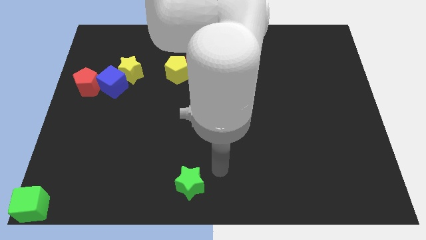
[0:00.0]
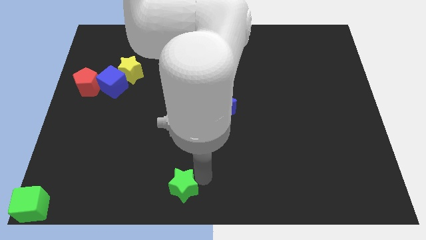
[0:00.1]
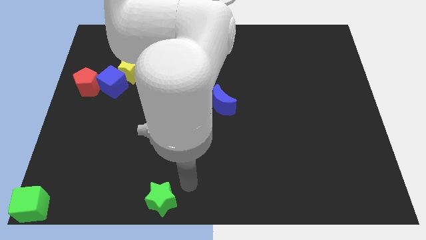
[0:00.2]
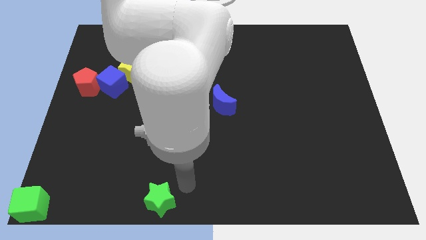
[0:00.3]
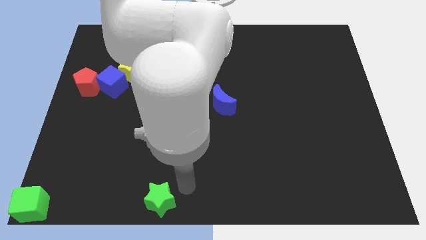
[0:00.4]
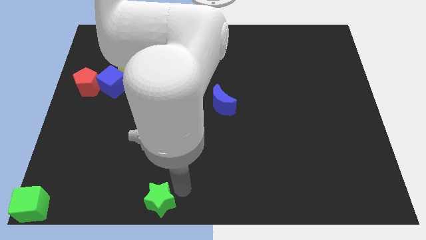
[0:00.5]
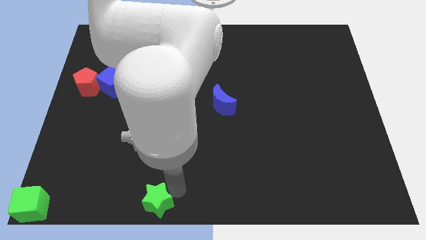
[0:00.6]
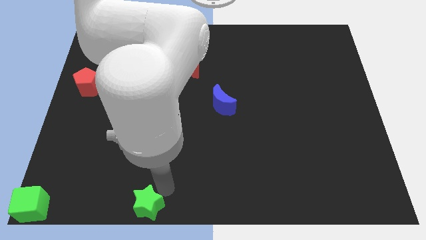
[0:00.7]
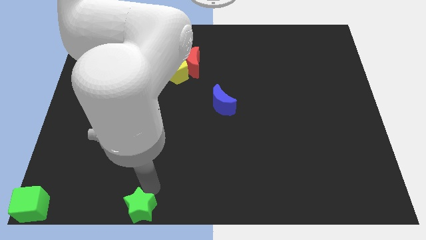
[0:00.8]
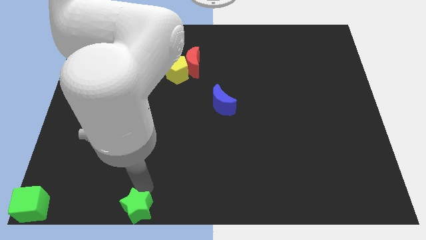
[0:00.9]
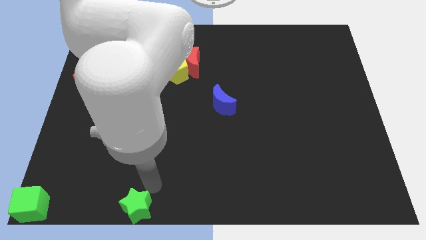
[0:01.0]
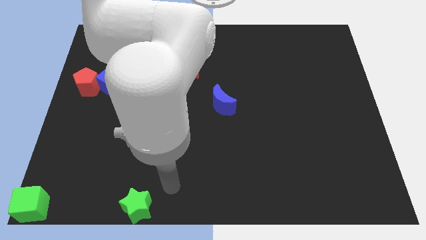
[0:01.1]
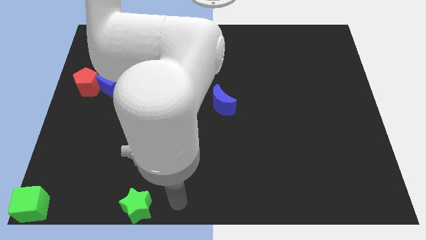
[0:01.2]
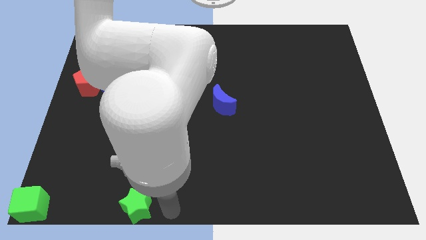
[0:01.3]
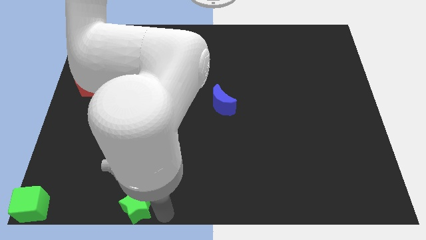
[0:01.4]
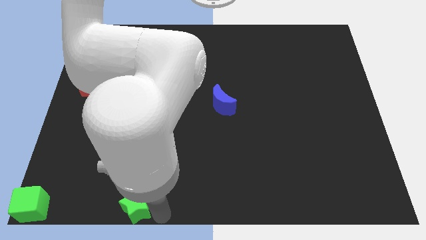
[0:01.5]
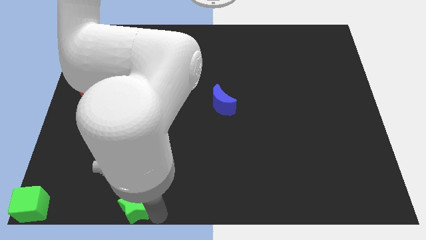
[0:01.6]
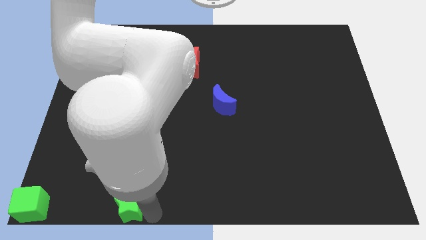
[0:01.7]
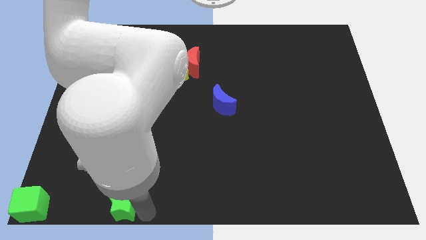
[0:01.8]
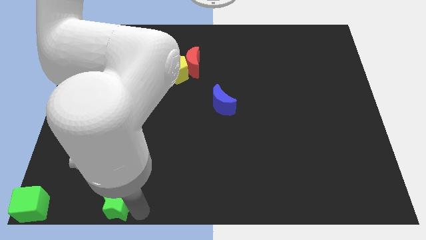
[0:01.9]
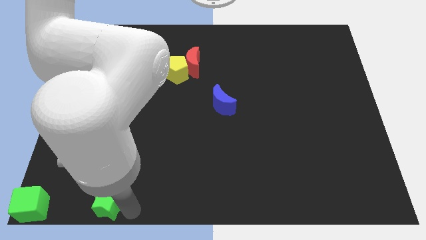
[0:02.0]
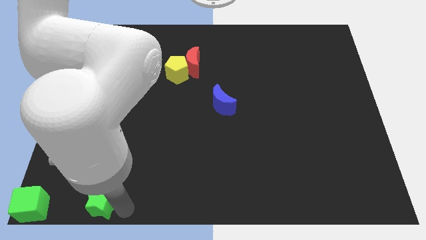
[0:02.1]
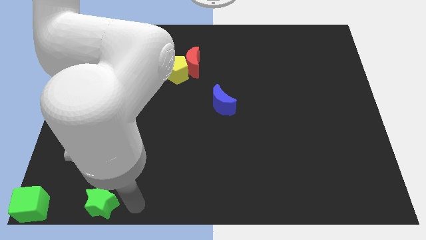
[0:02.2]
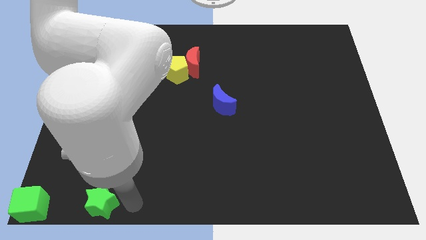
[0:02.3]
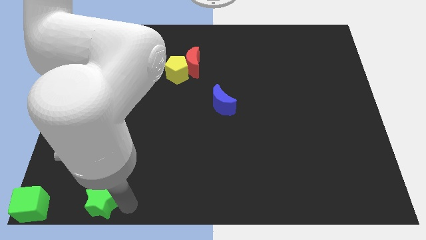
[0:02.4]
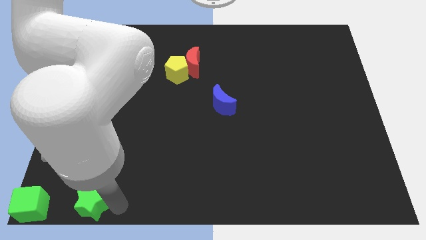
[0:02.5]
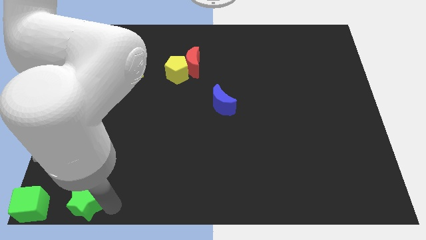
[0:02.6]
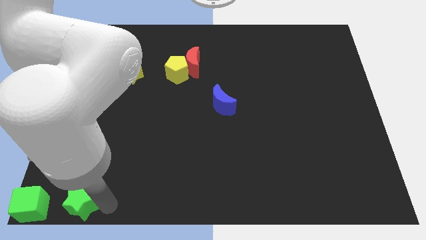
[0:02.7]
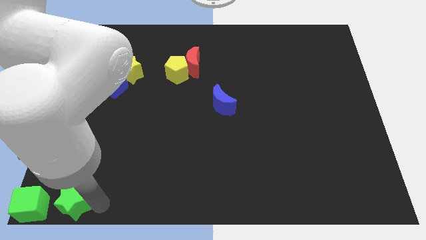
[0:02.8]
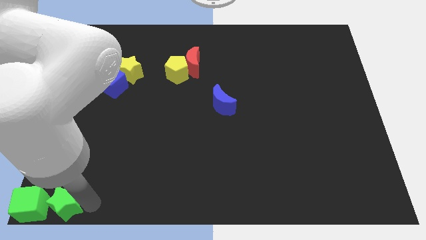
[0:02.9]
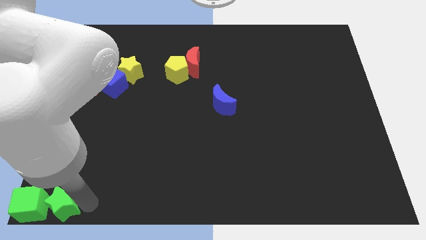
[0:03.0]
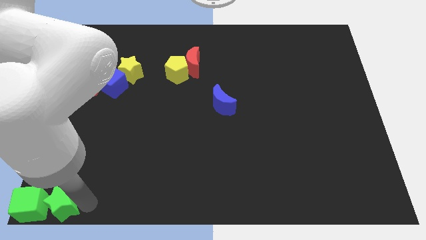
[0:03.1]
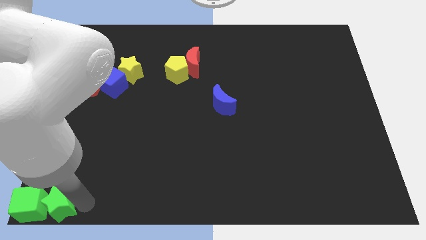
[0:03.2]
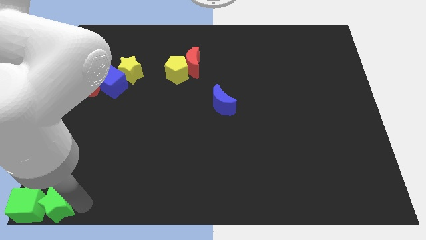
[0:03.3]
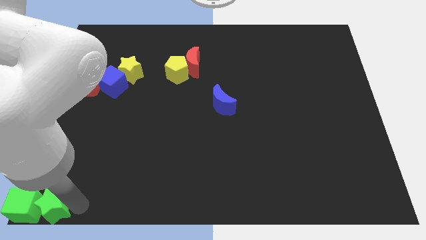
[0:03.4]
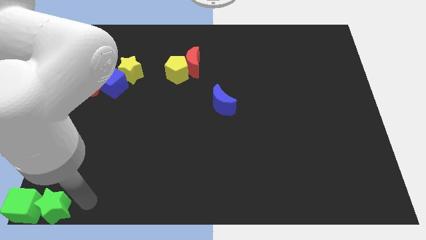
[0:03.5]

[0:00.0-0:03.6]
push the green star into the right side of the green cube

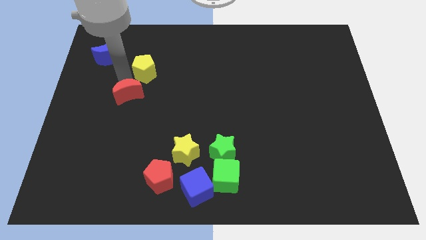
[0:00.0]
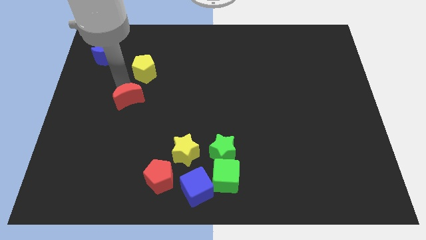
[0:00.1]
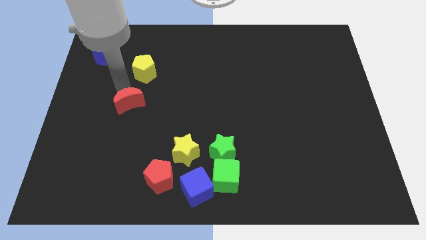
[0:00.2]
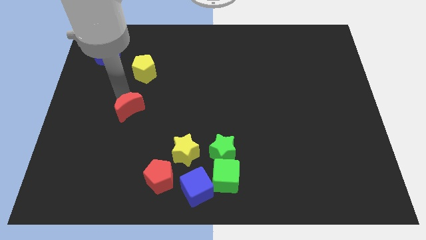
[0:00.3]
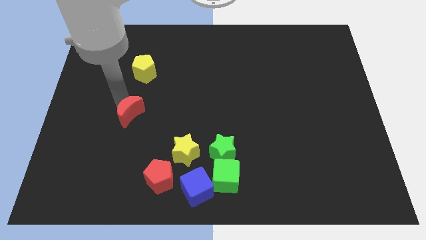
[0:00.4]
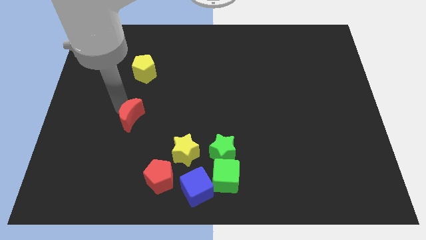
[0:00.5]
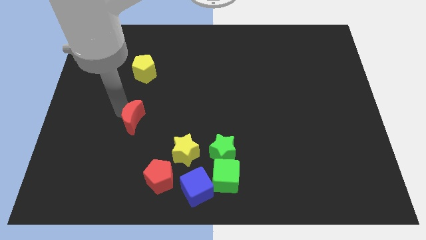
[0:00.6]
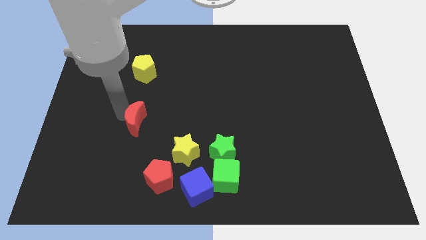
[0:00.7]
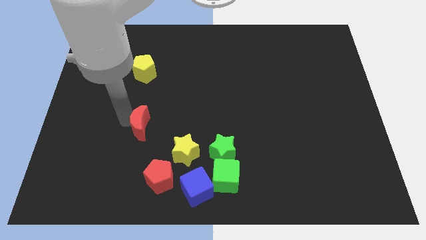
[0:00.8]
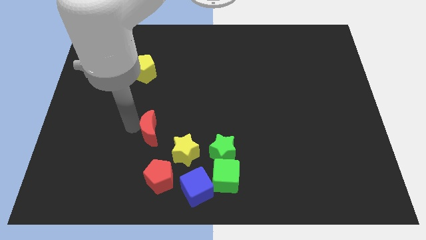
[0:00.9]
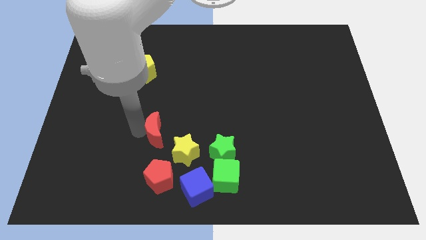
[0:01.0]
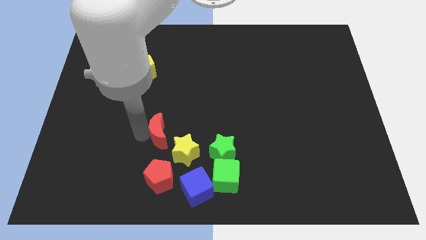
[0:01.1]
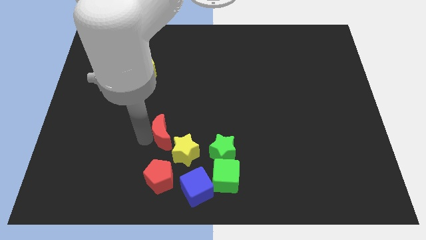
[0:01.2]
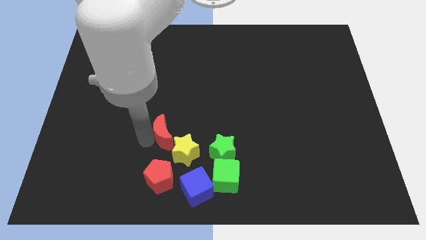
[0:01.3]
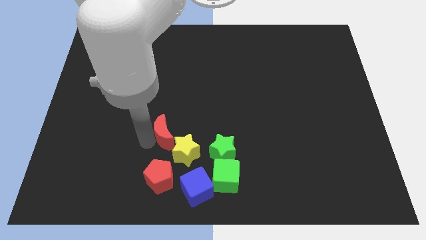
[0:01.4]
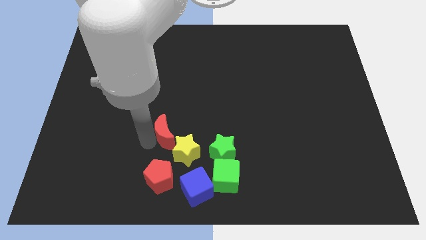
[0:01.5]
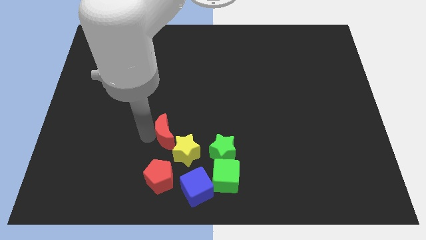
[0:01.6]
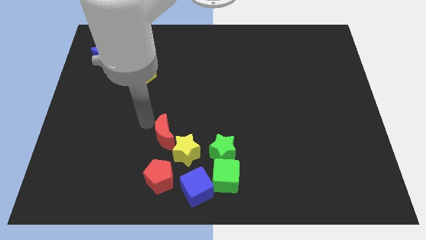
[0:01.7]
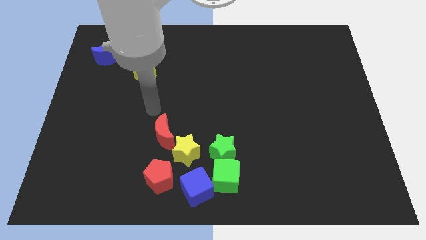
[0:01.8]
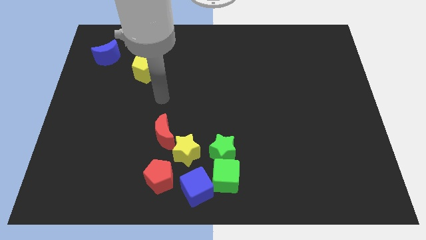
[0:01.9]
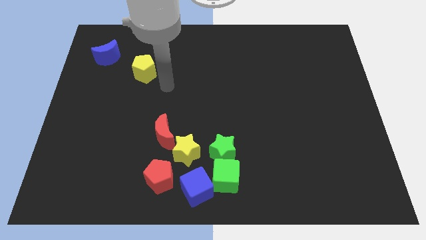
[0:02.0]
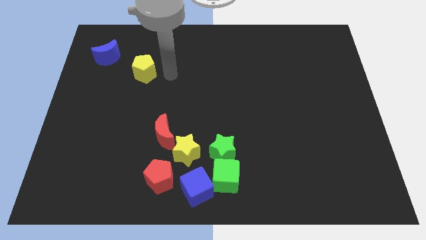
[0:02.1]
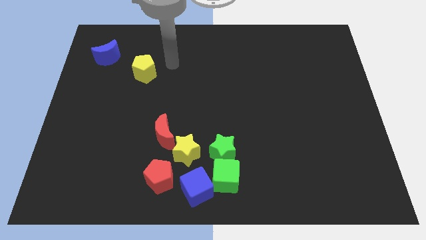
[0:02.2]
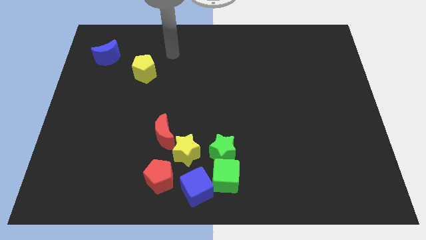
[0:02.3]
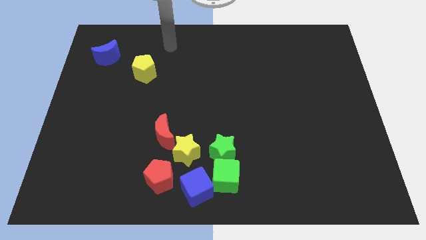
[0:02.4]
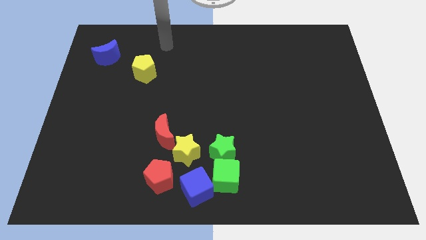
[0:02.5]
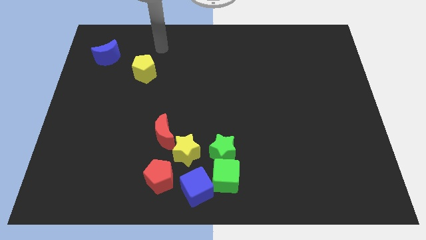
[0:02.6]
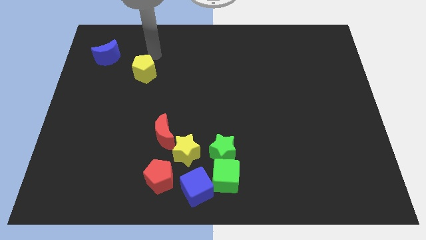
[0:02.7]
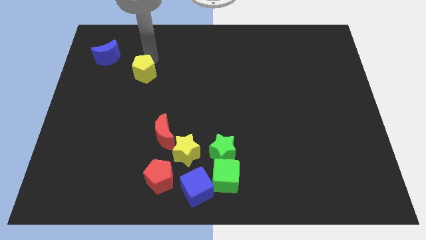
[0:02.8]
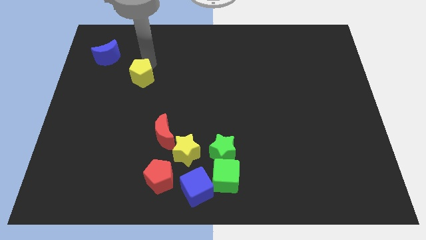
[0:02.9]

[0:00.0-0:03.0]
place the red moon to the top left of the yellow star

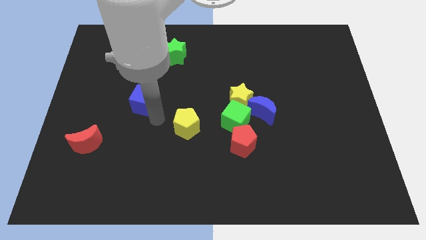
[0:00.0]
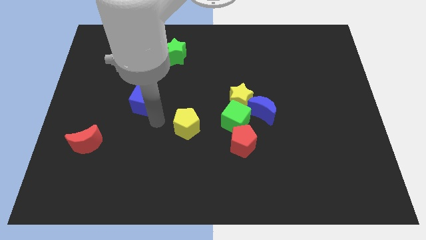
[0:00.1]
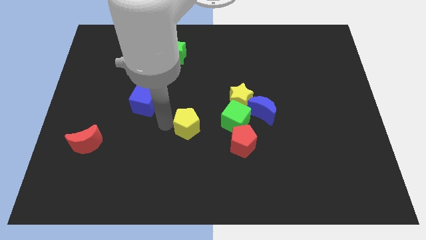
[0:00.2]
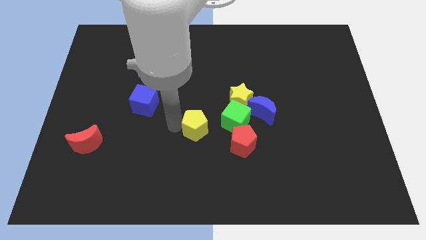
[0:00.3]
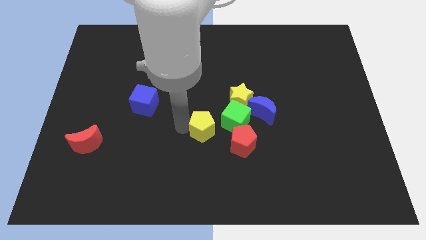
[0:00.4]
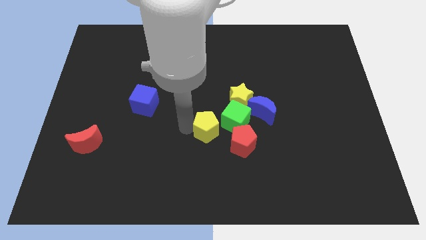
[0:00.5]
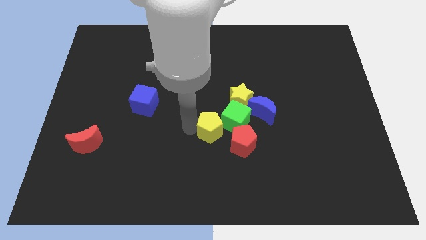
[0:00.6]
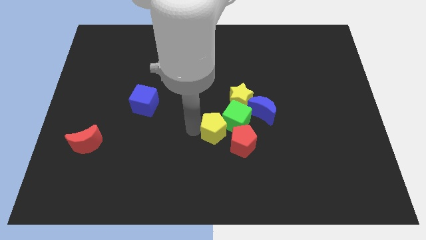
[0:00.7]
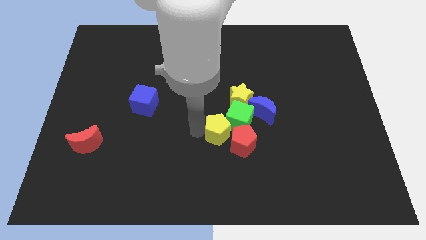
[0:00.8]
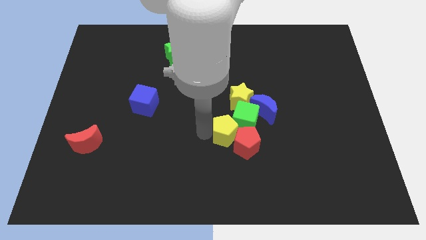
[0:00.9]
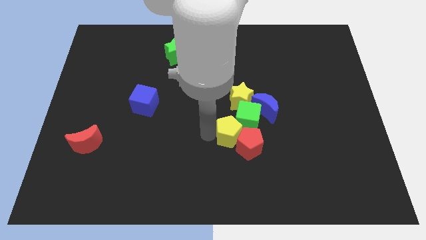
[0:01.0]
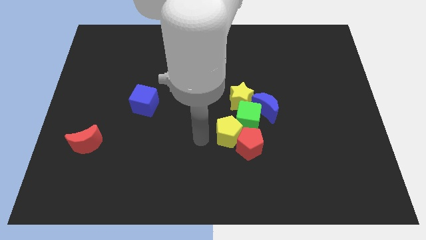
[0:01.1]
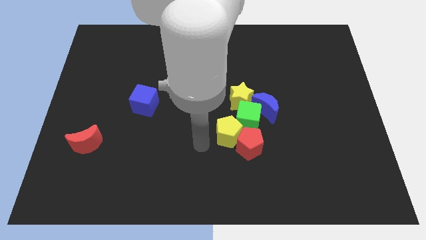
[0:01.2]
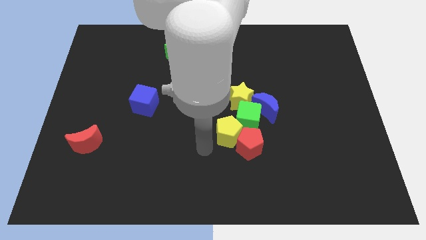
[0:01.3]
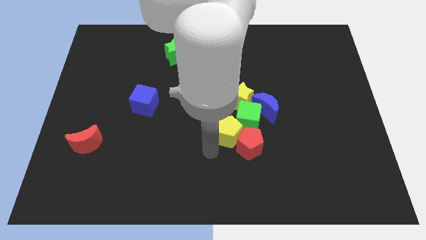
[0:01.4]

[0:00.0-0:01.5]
push the yellow pentagon into the green cube and red pentagon

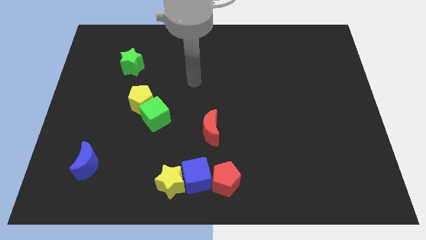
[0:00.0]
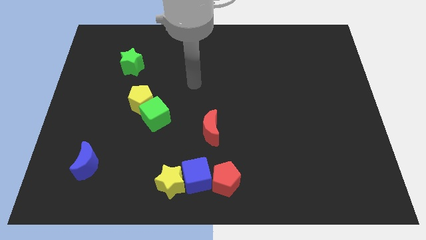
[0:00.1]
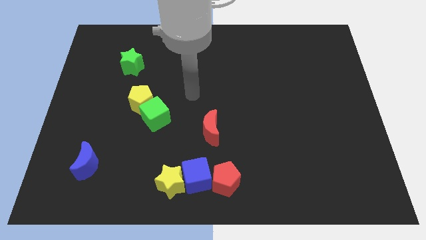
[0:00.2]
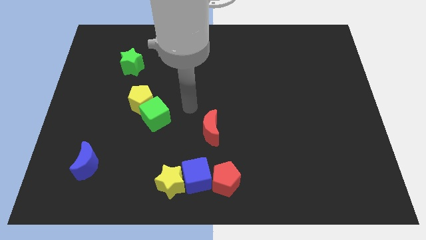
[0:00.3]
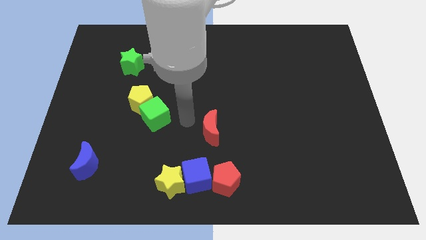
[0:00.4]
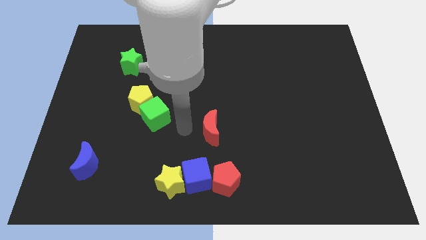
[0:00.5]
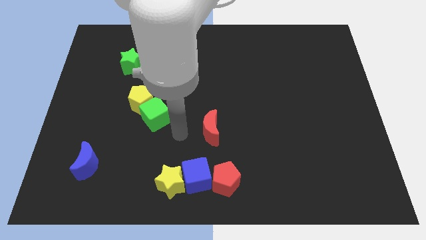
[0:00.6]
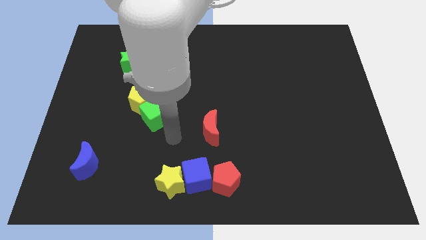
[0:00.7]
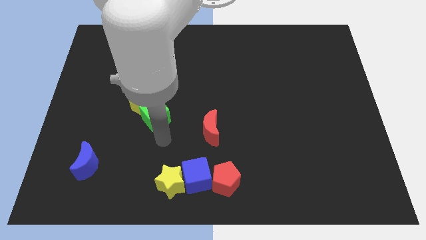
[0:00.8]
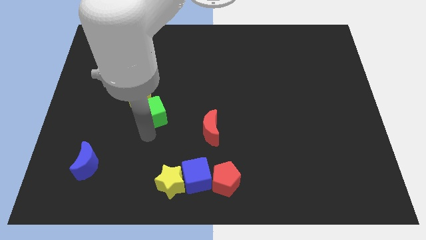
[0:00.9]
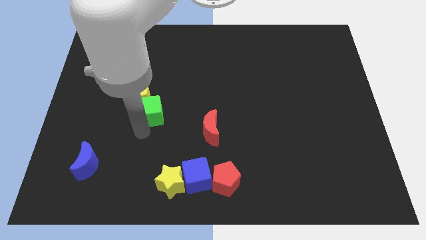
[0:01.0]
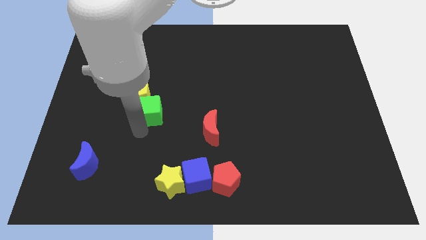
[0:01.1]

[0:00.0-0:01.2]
tap the green cube
